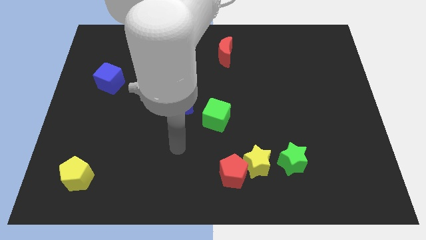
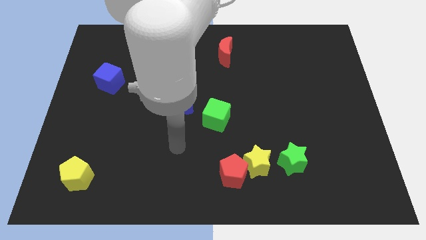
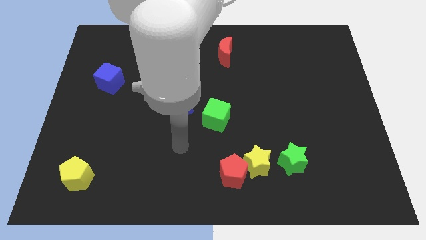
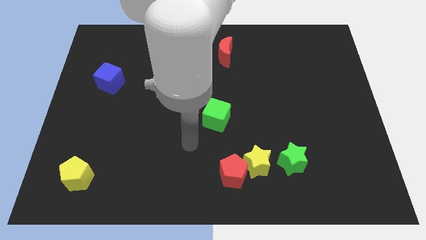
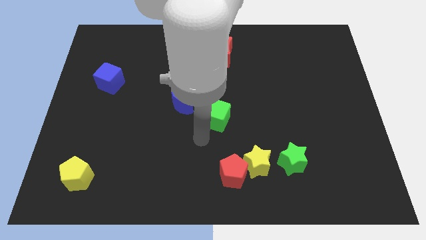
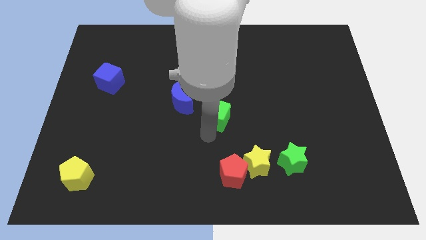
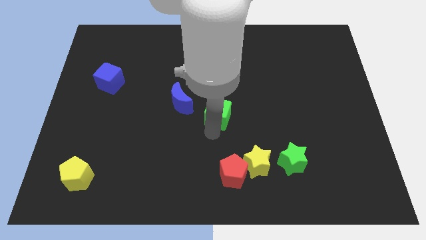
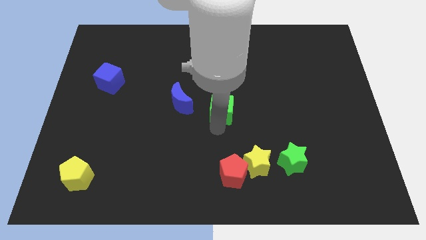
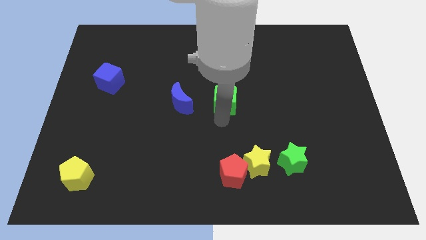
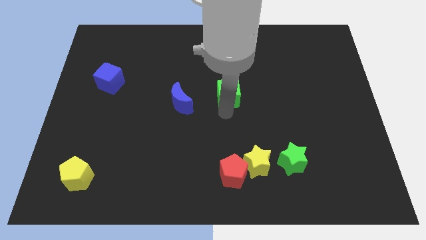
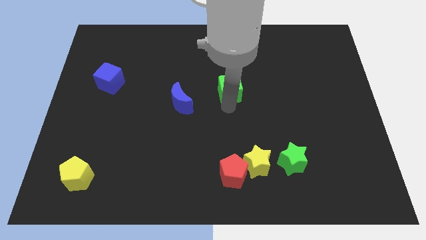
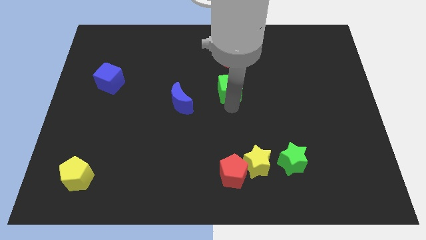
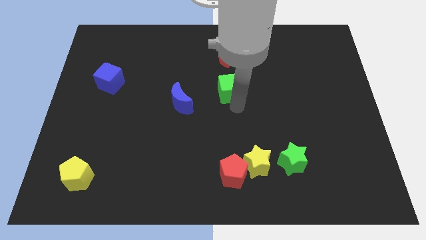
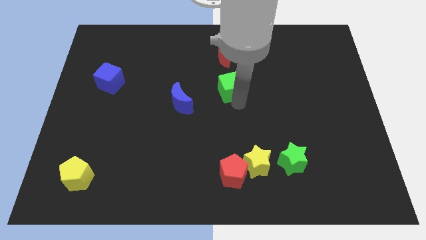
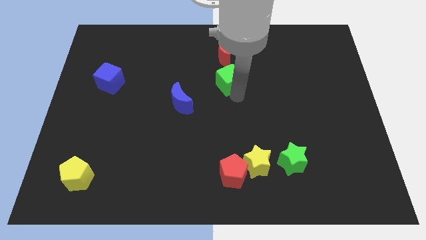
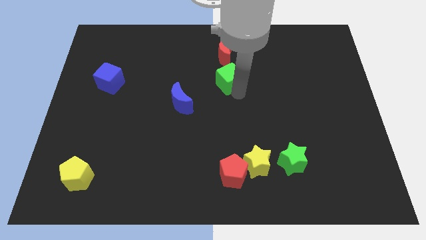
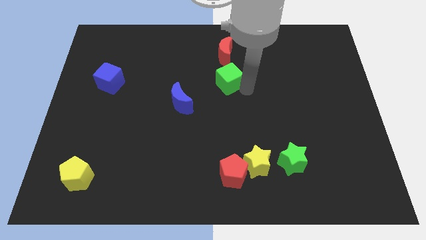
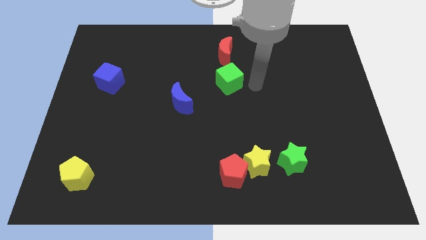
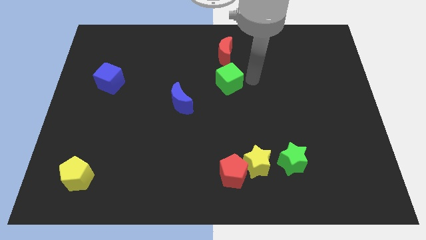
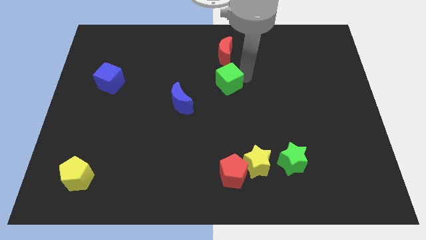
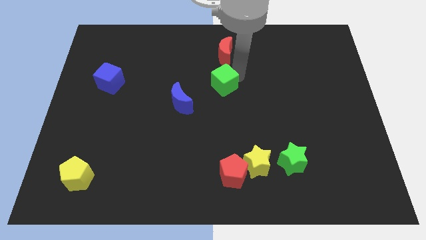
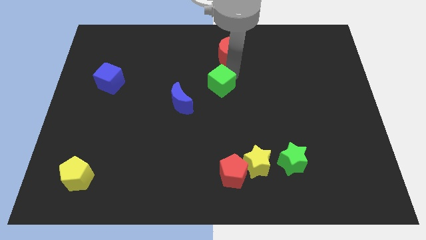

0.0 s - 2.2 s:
slide the green cube near the red moon

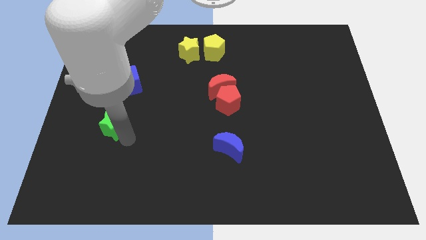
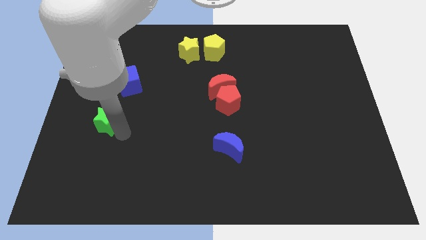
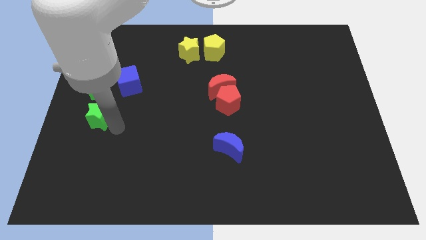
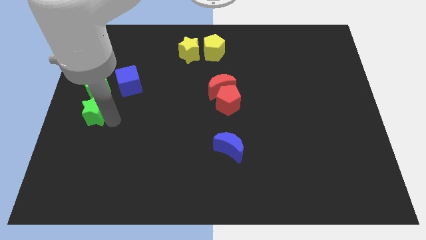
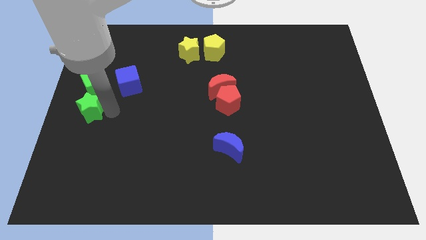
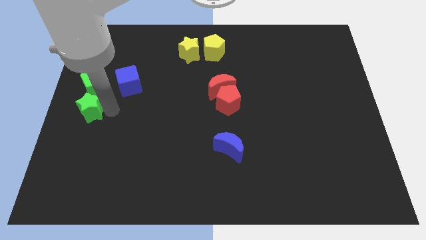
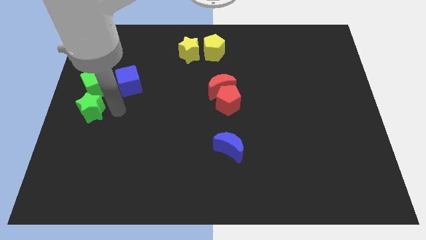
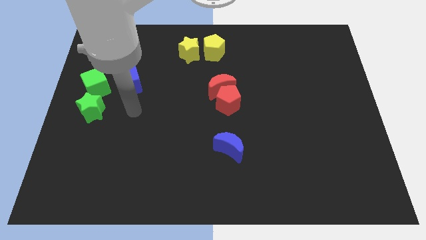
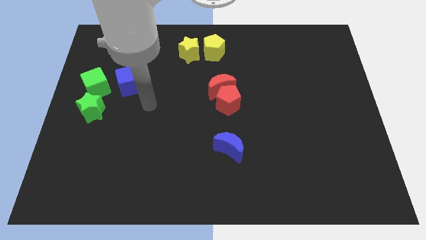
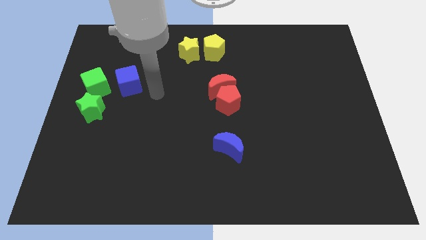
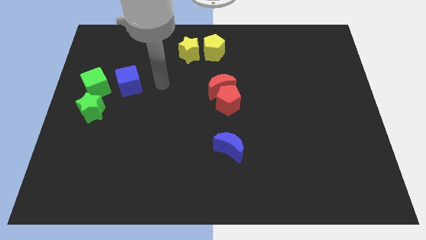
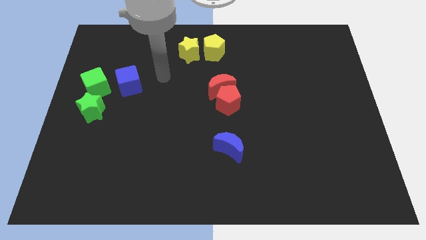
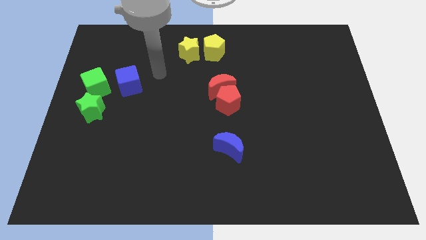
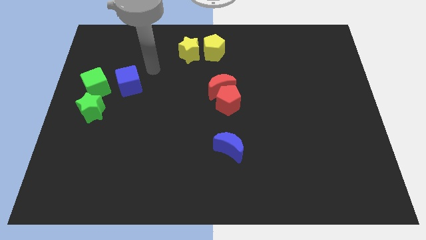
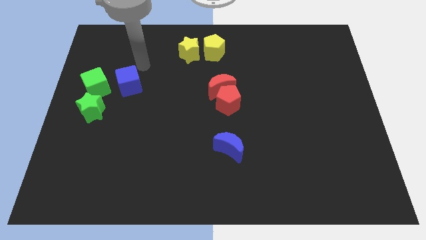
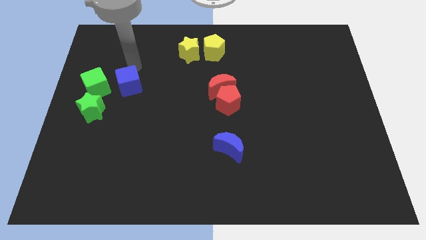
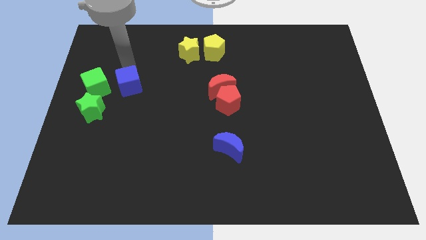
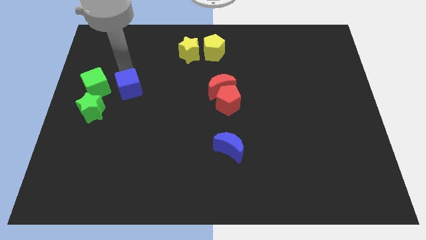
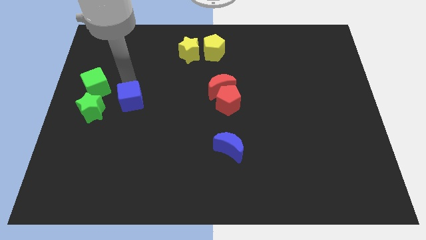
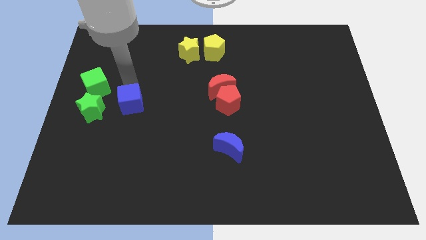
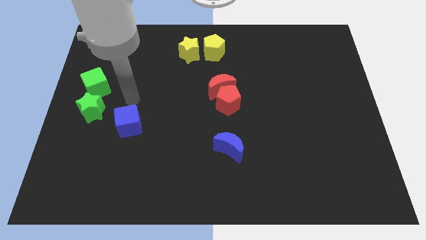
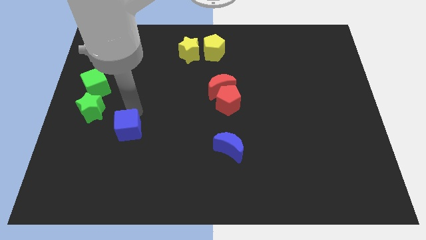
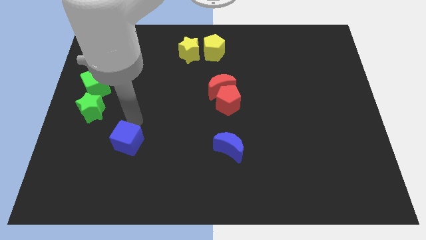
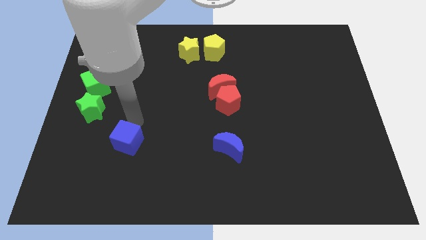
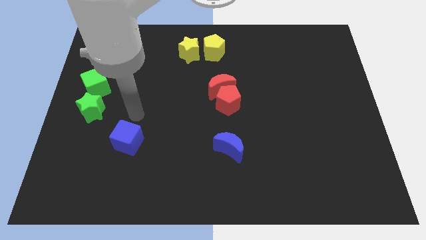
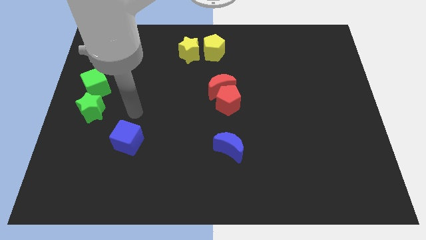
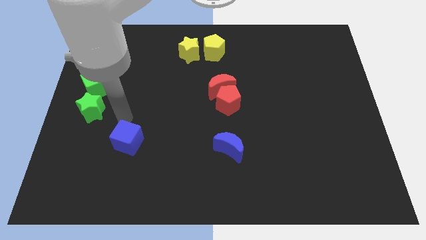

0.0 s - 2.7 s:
push blue cube slightly downwards

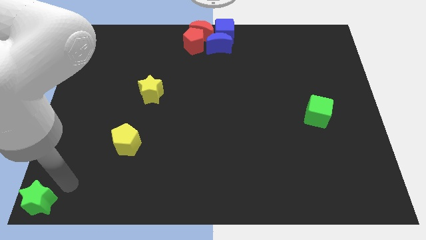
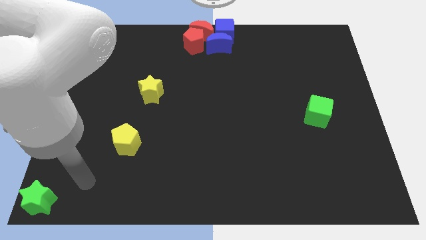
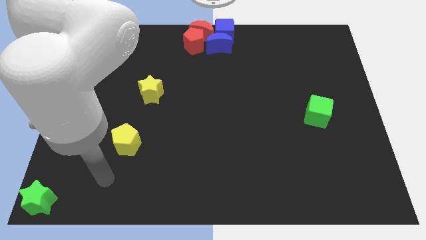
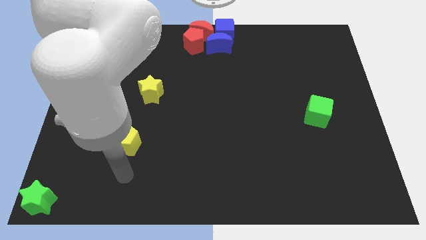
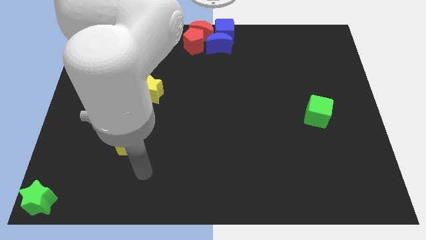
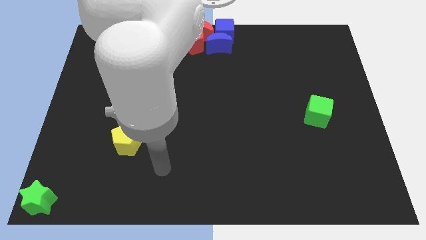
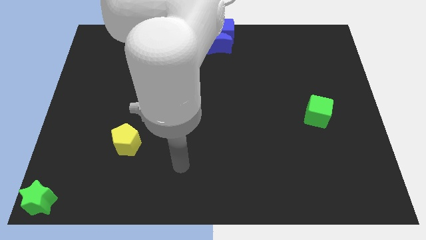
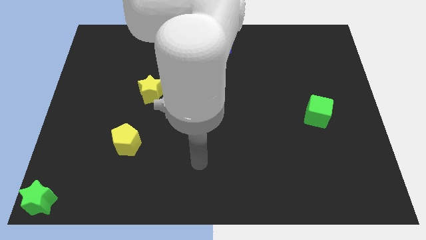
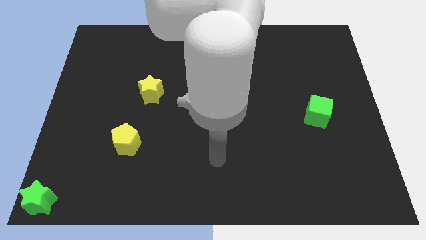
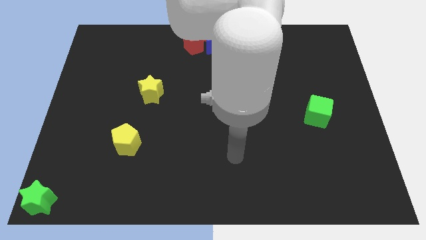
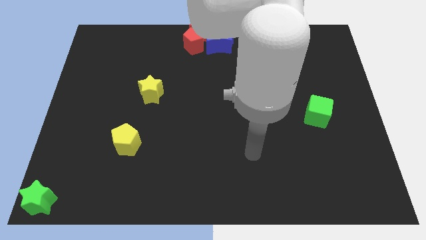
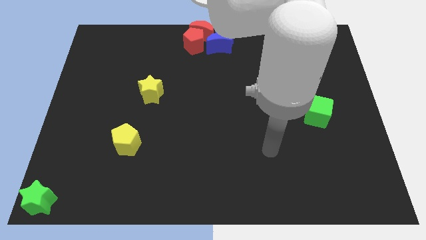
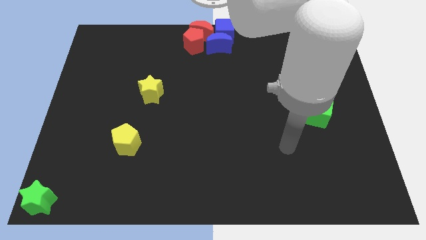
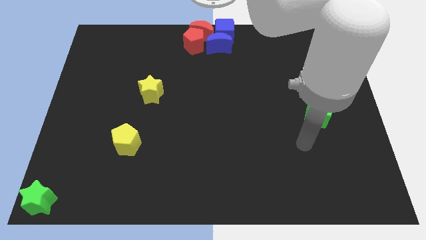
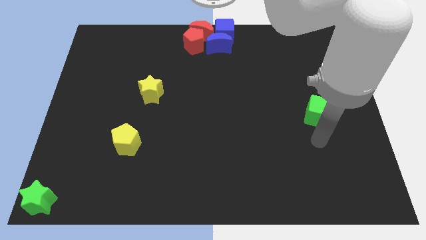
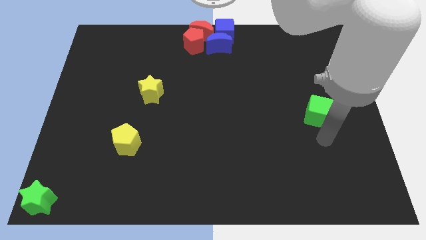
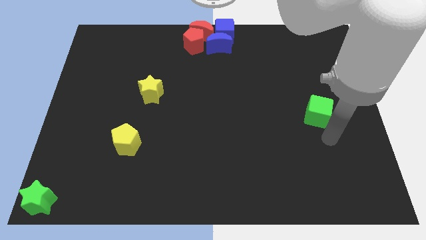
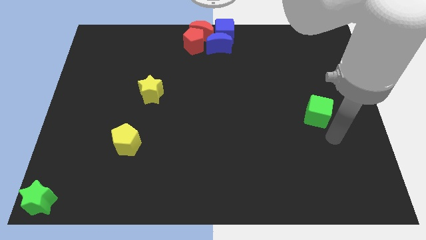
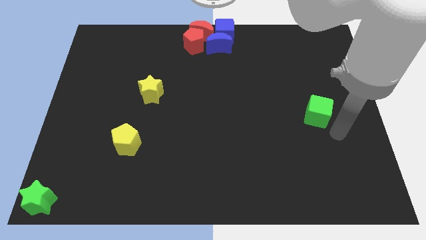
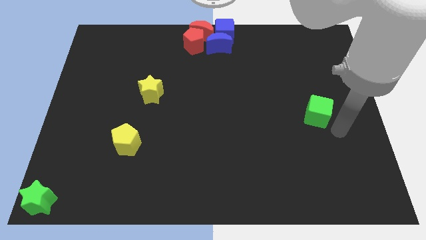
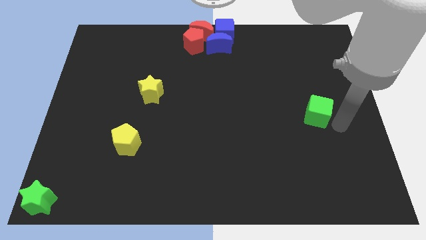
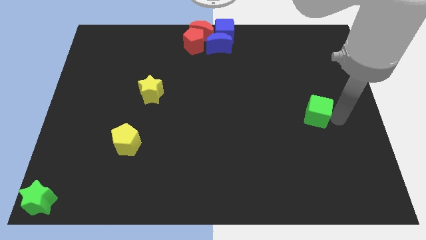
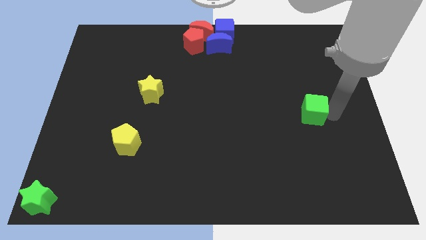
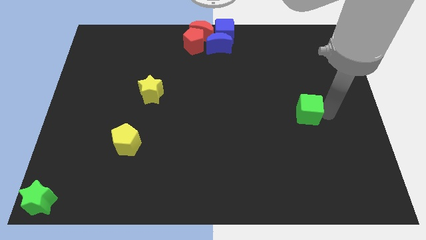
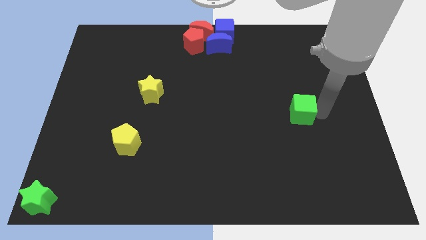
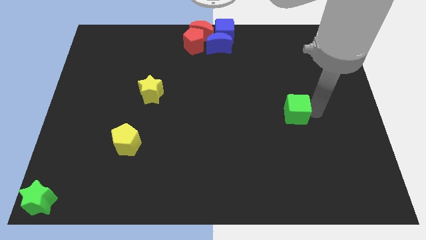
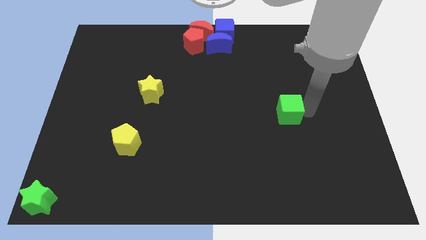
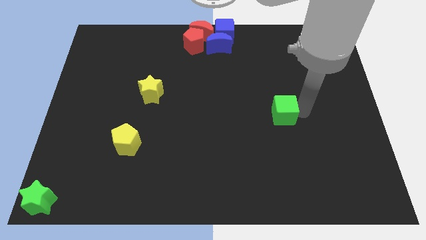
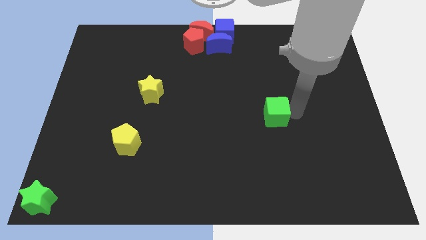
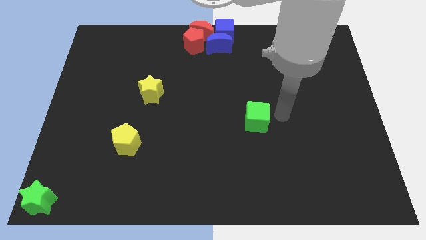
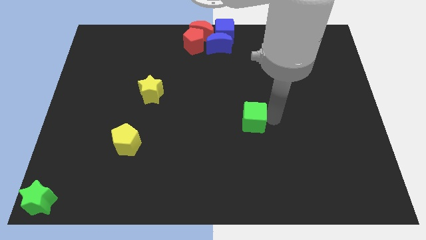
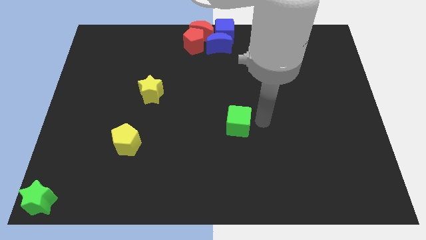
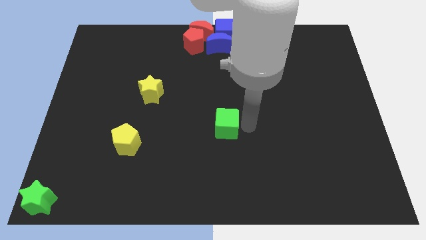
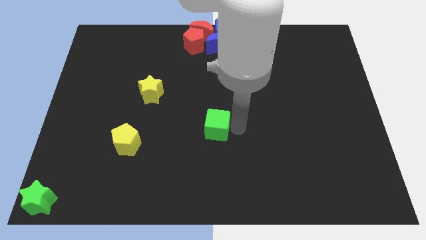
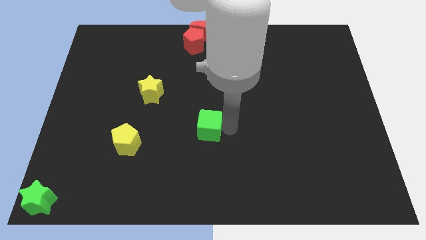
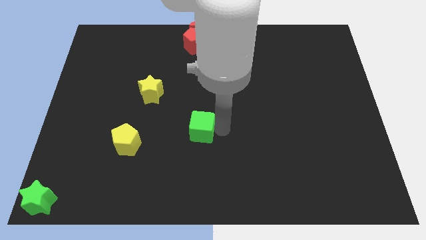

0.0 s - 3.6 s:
move the green cube towards yellow pentagon

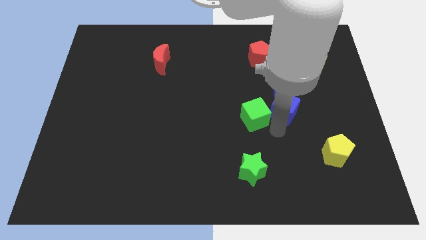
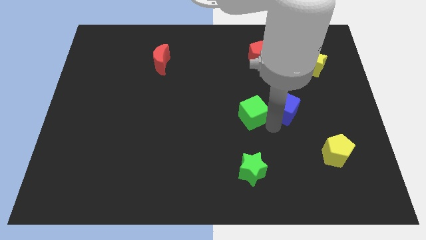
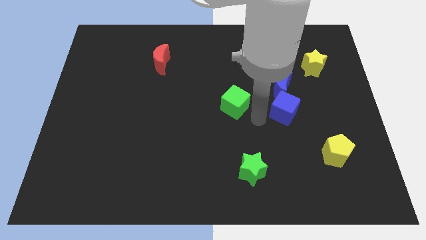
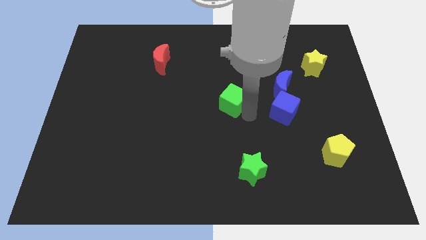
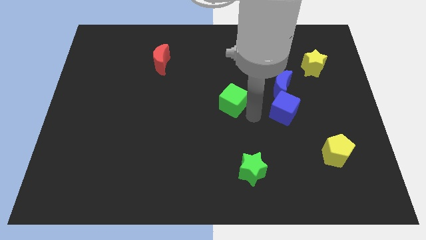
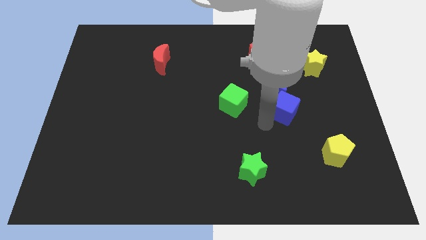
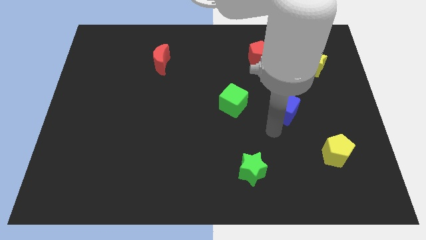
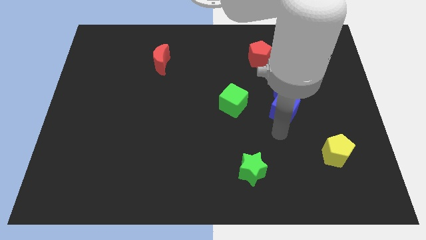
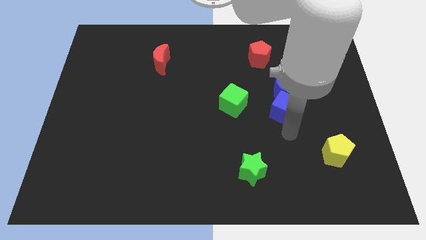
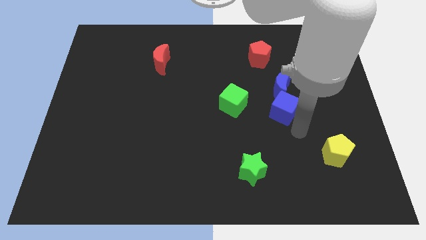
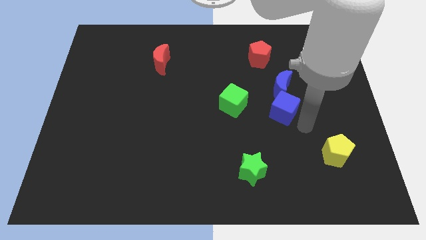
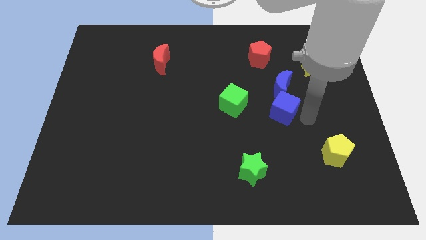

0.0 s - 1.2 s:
move the green cube diagonally top left to the green star
